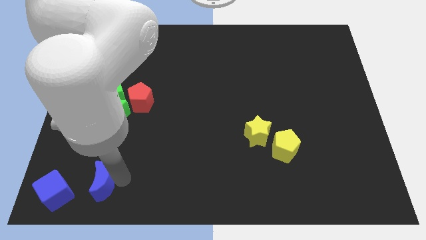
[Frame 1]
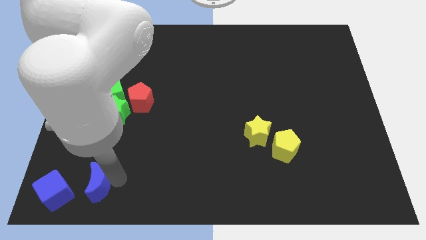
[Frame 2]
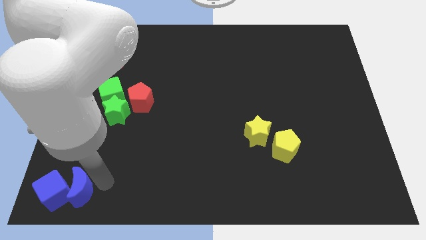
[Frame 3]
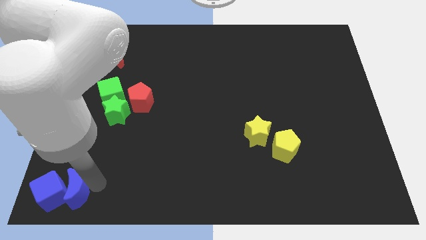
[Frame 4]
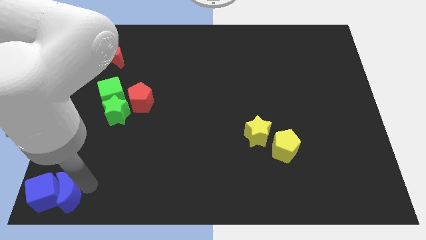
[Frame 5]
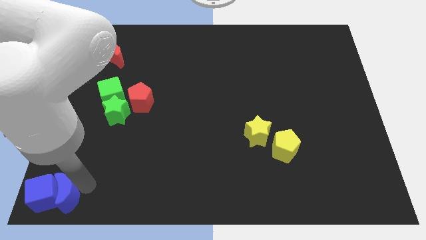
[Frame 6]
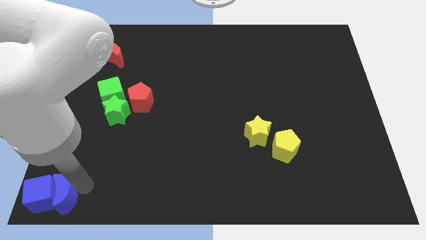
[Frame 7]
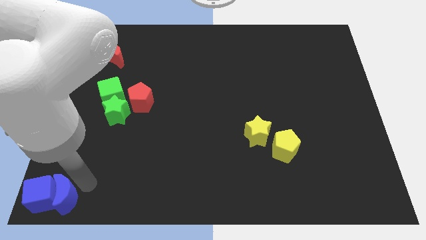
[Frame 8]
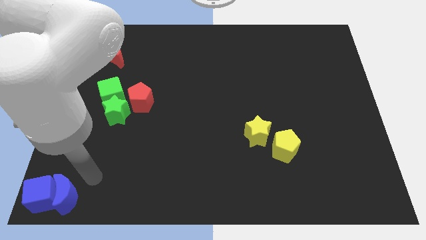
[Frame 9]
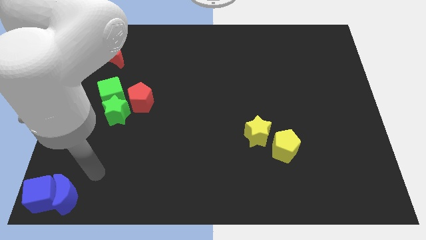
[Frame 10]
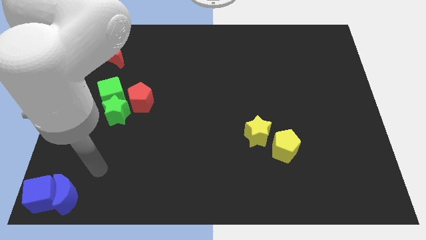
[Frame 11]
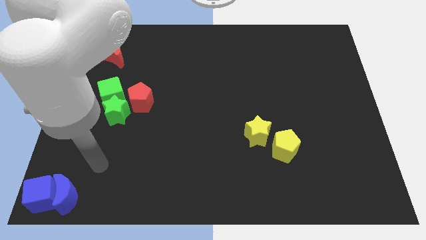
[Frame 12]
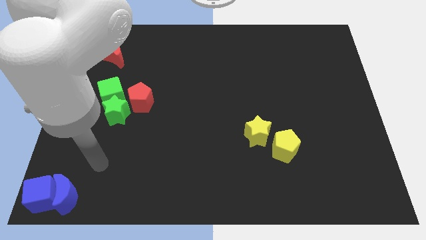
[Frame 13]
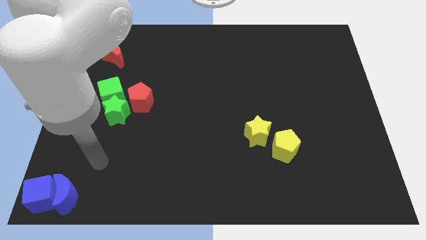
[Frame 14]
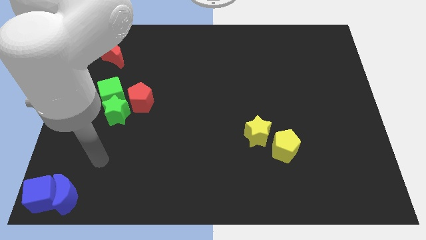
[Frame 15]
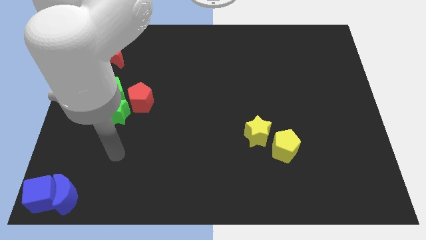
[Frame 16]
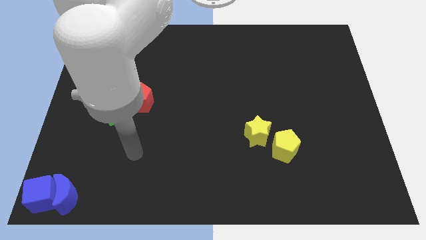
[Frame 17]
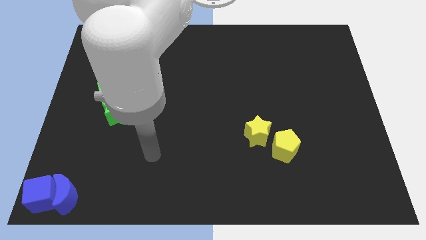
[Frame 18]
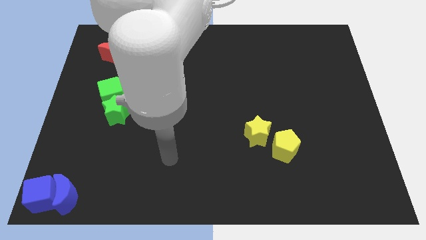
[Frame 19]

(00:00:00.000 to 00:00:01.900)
move the blue moon into the blue cube

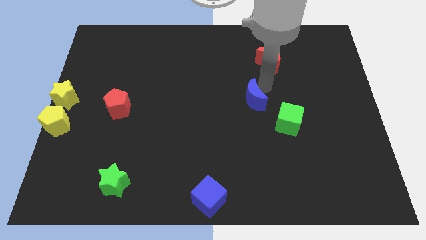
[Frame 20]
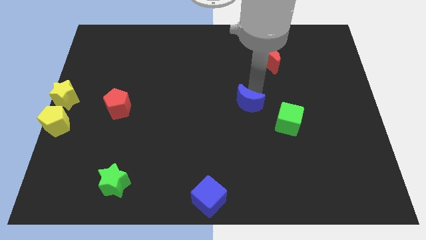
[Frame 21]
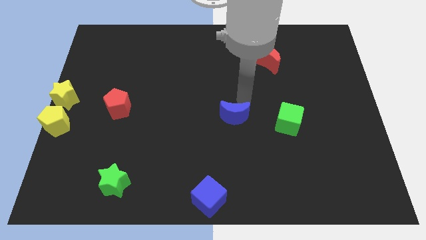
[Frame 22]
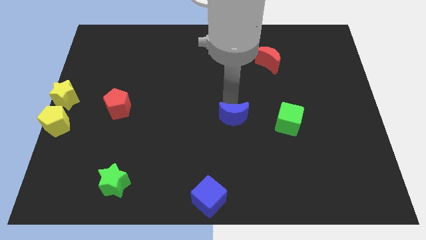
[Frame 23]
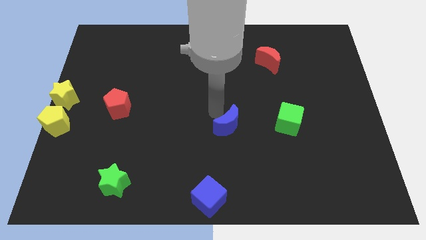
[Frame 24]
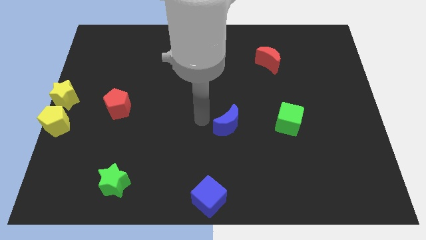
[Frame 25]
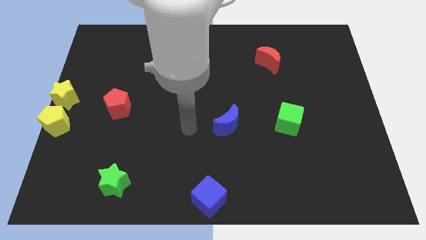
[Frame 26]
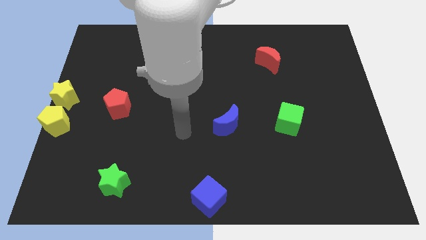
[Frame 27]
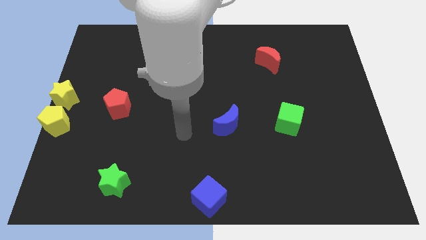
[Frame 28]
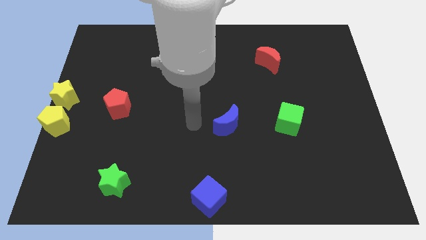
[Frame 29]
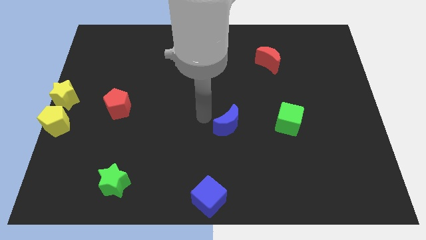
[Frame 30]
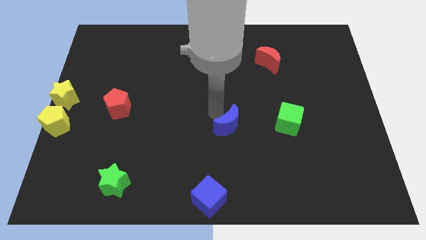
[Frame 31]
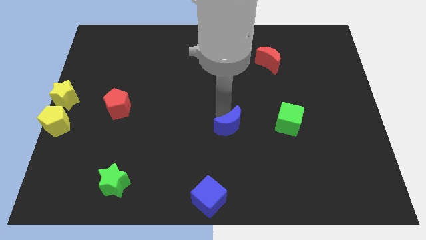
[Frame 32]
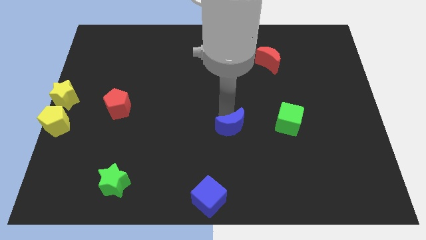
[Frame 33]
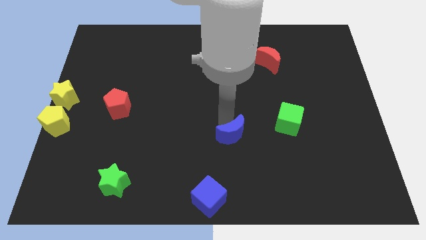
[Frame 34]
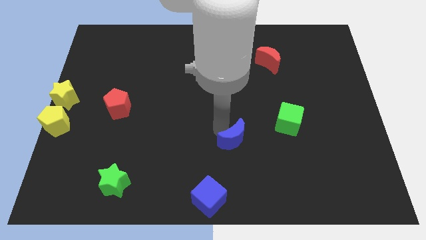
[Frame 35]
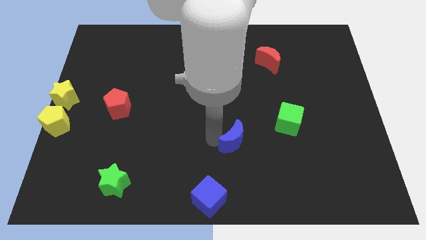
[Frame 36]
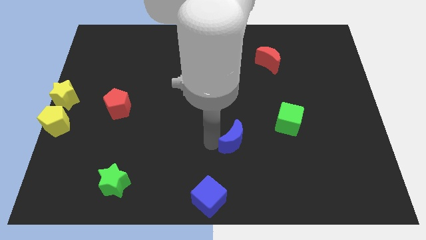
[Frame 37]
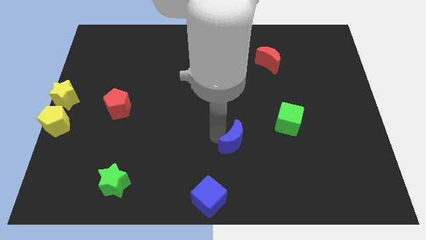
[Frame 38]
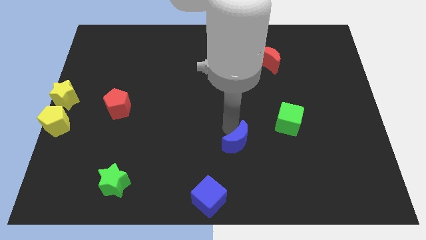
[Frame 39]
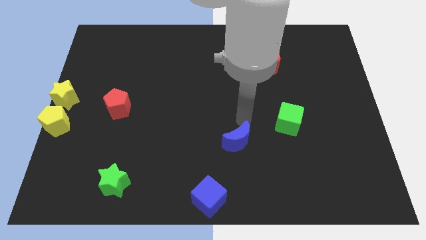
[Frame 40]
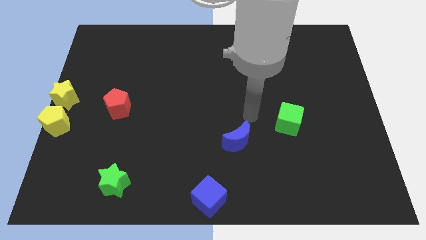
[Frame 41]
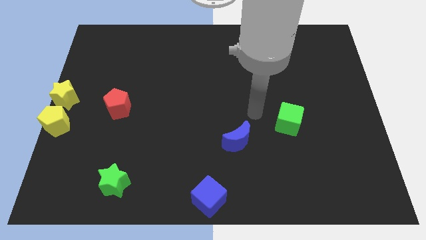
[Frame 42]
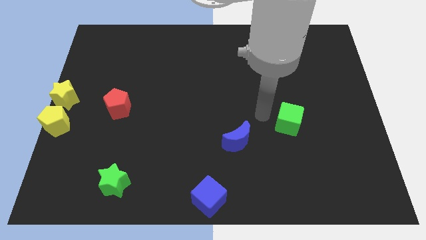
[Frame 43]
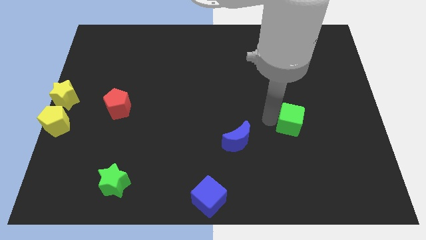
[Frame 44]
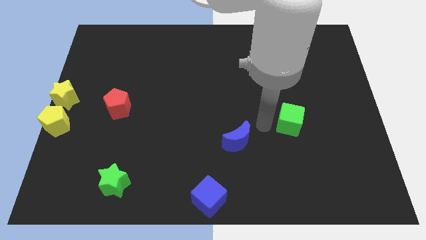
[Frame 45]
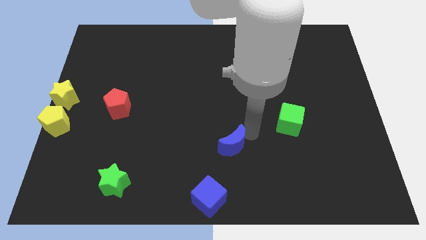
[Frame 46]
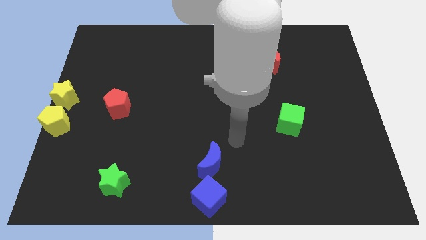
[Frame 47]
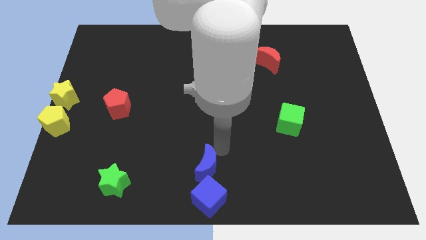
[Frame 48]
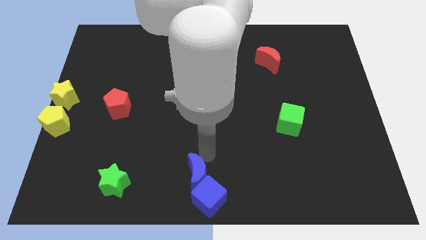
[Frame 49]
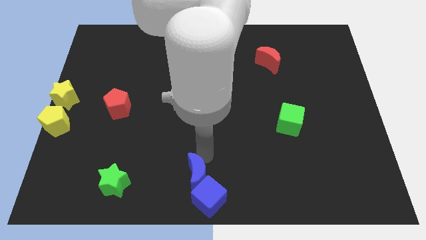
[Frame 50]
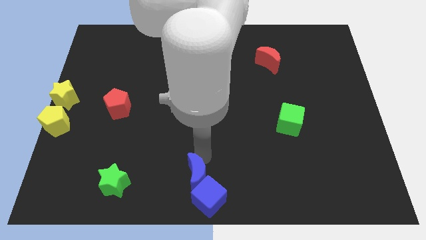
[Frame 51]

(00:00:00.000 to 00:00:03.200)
push the blue moon into the blue cube

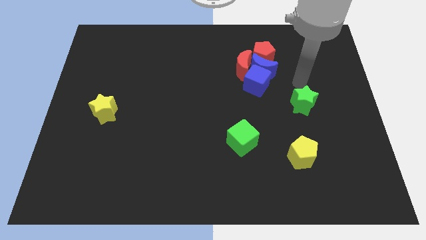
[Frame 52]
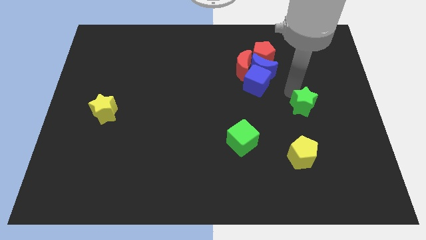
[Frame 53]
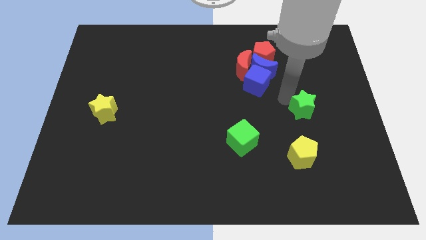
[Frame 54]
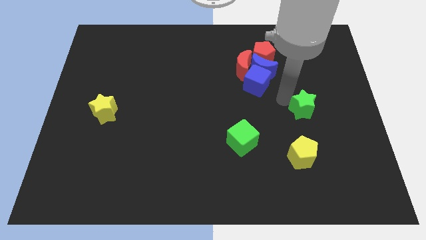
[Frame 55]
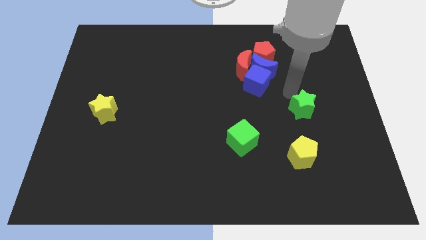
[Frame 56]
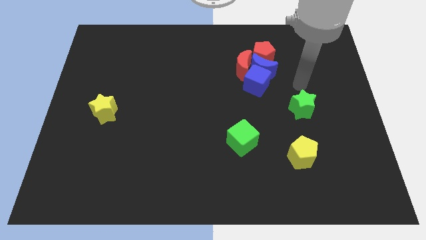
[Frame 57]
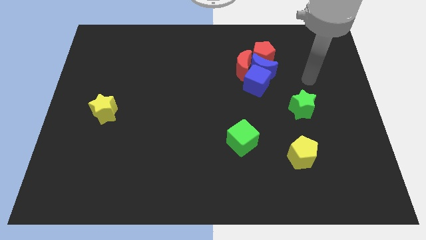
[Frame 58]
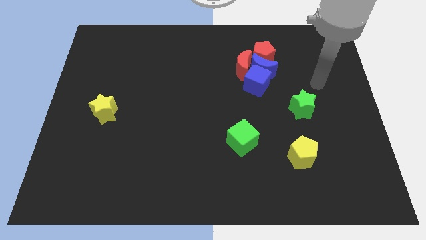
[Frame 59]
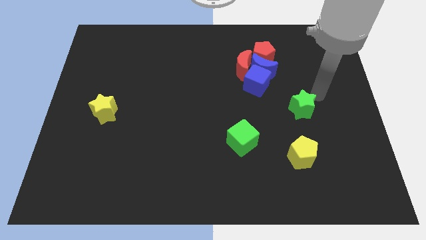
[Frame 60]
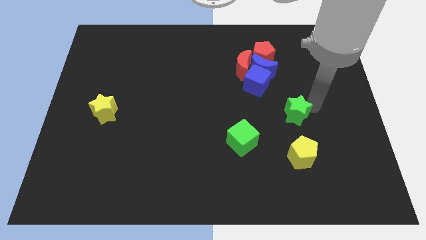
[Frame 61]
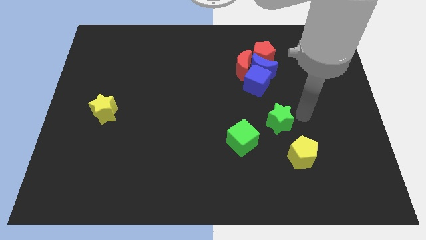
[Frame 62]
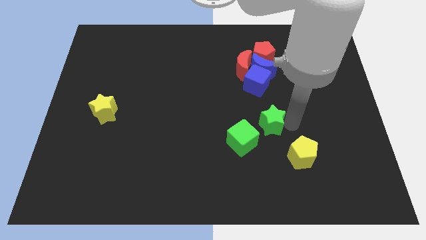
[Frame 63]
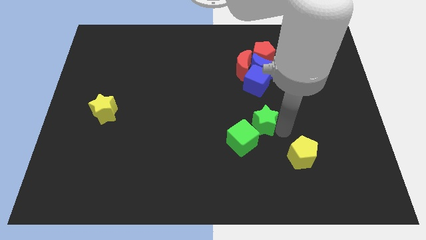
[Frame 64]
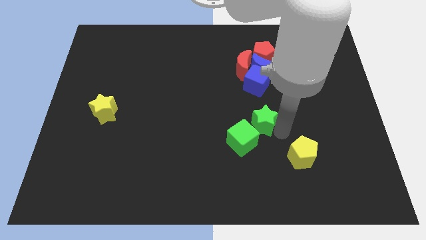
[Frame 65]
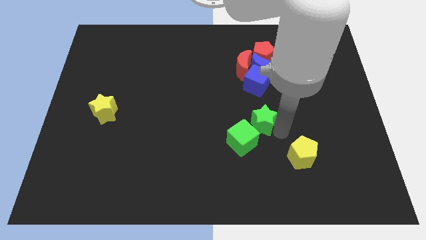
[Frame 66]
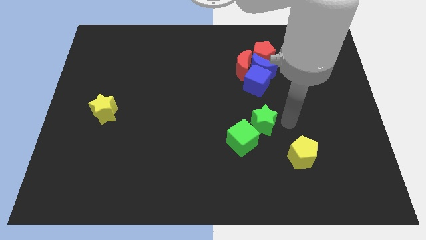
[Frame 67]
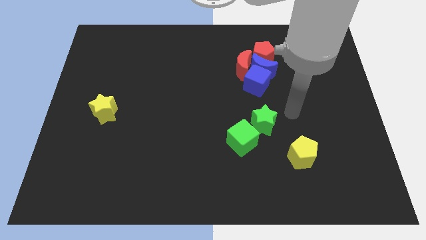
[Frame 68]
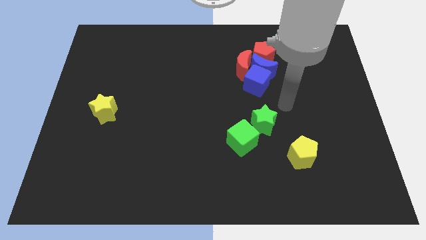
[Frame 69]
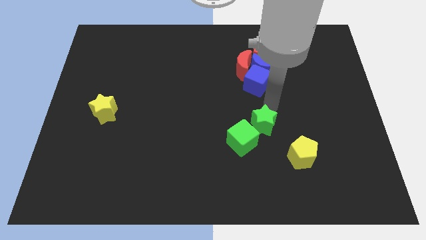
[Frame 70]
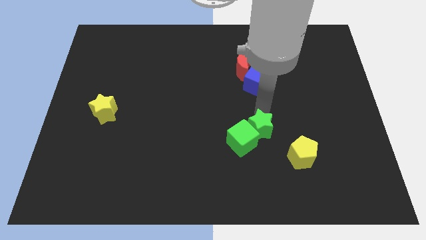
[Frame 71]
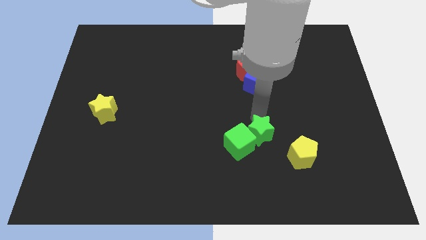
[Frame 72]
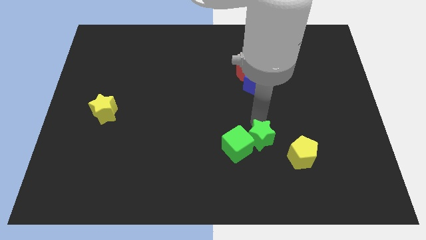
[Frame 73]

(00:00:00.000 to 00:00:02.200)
push the green star towards the right side of the green cube

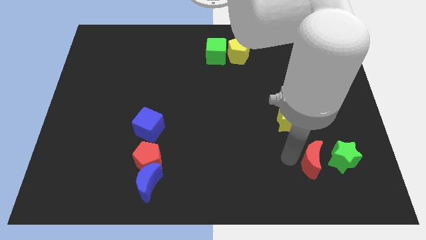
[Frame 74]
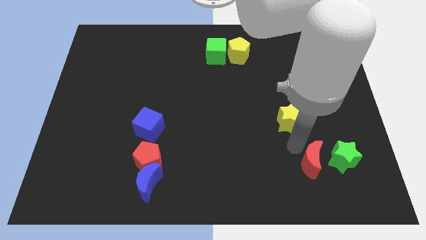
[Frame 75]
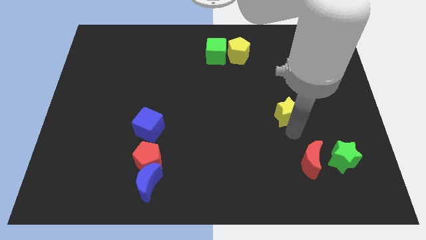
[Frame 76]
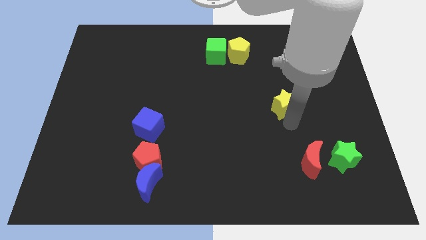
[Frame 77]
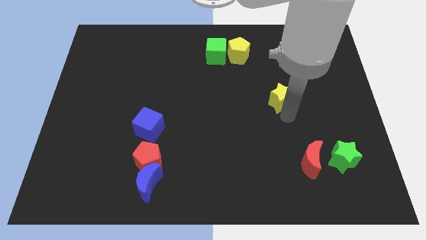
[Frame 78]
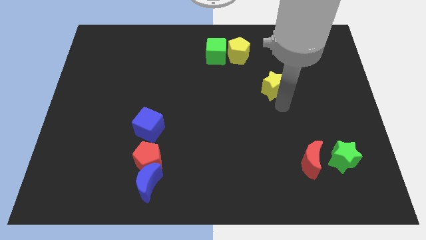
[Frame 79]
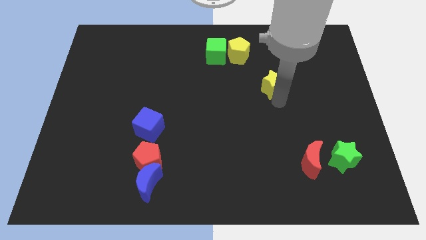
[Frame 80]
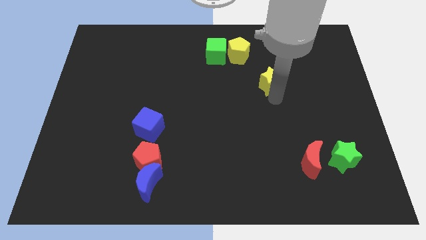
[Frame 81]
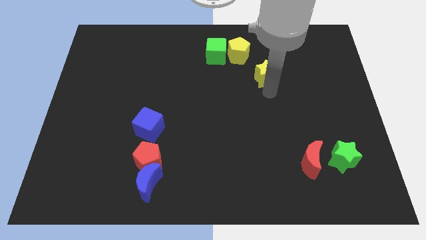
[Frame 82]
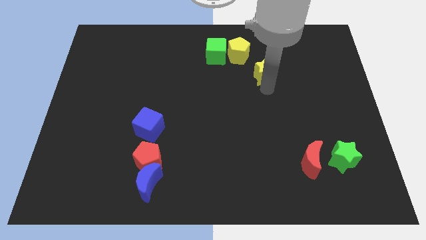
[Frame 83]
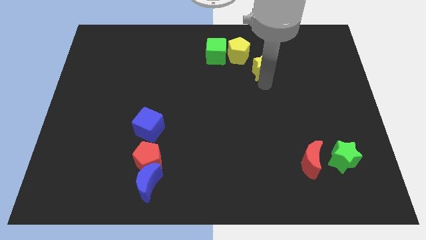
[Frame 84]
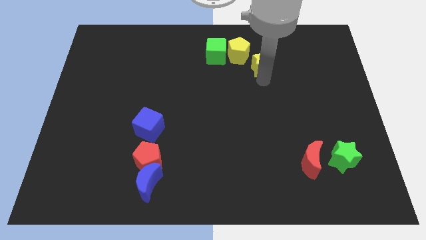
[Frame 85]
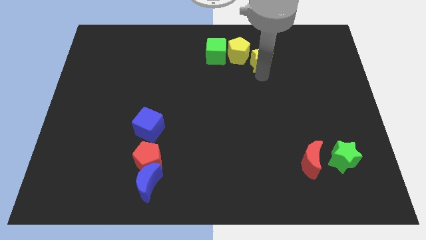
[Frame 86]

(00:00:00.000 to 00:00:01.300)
push the yellow star diagonally bottom right to the yellow pentagon

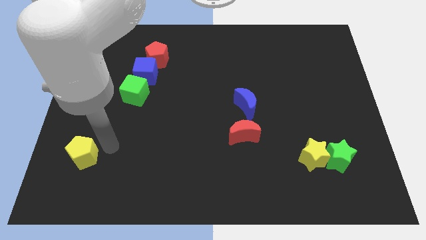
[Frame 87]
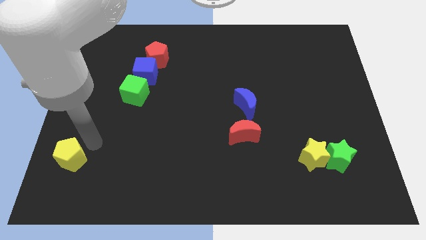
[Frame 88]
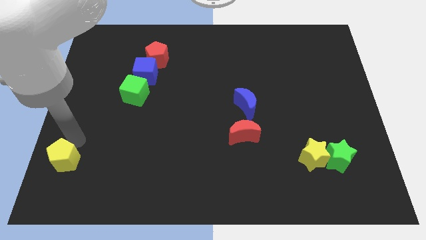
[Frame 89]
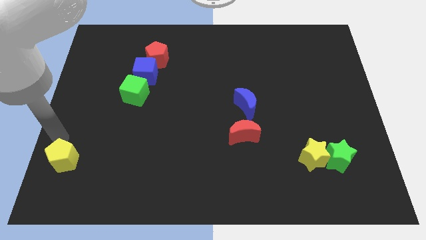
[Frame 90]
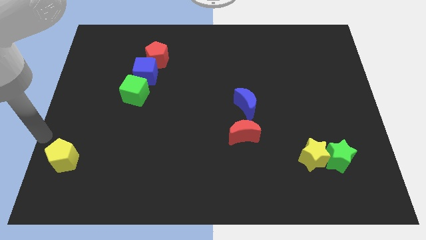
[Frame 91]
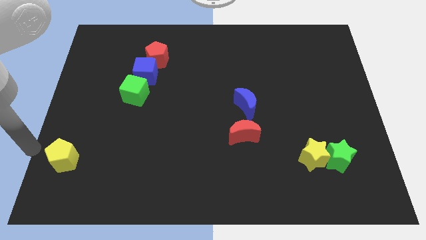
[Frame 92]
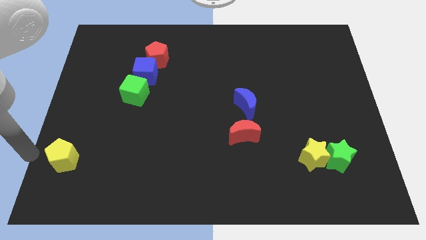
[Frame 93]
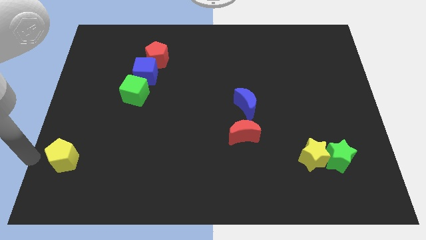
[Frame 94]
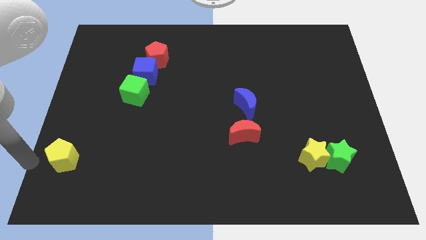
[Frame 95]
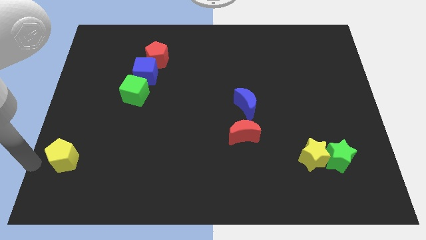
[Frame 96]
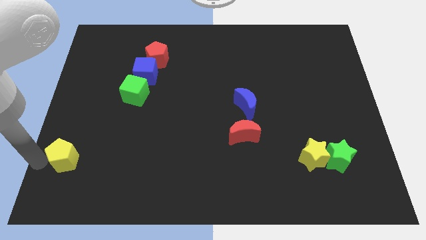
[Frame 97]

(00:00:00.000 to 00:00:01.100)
slide the yellow pentagon slightly to the left
